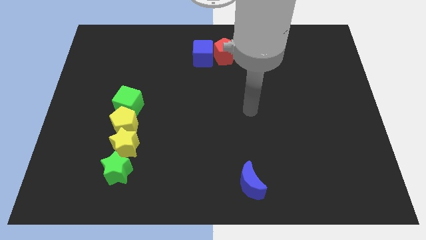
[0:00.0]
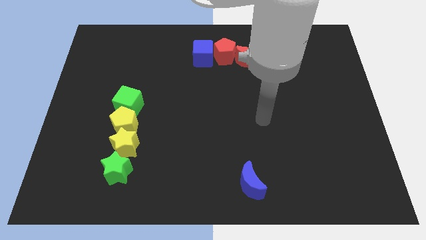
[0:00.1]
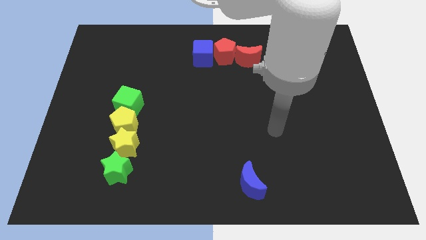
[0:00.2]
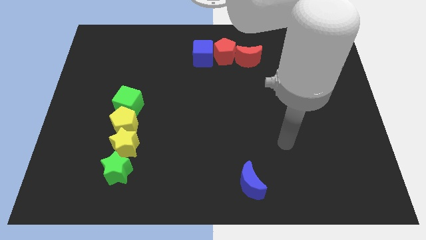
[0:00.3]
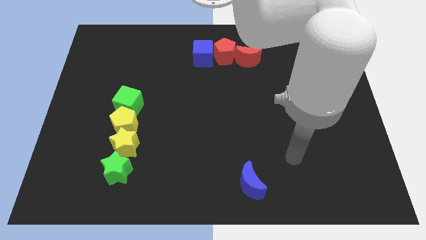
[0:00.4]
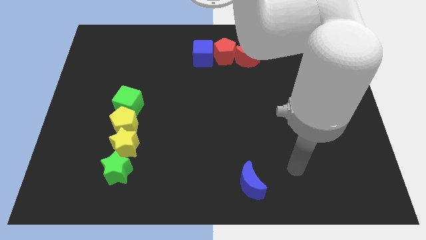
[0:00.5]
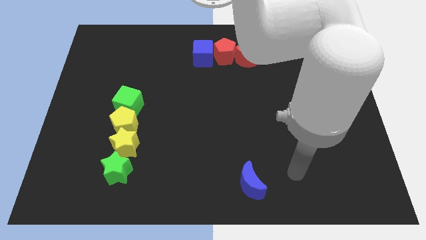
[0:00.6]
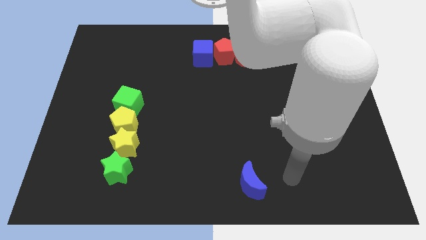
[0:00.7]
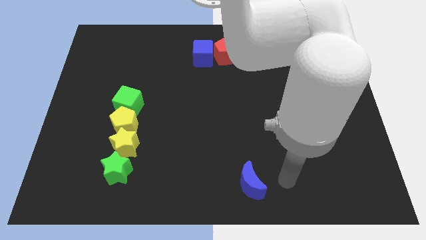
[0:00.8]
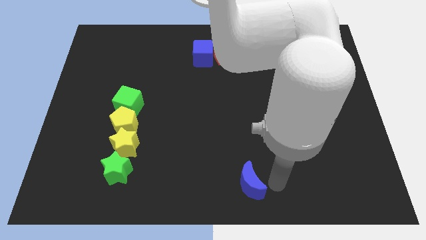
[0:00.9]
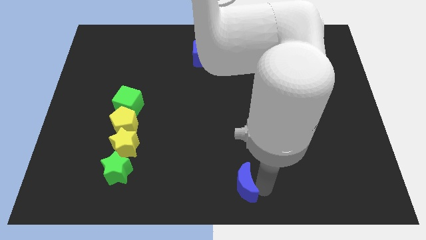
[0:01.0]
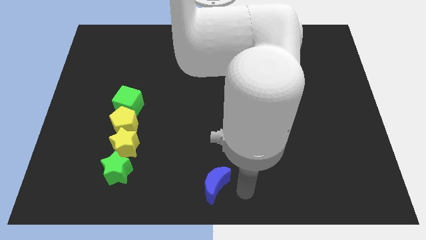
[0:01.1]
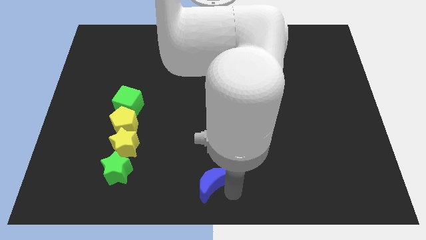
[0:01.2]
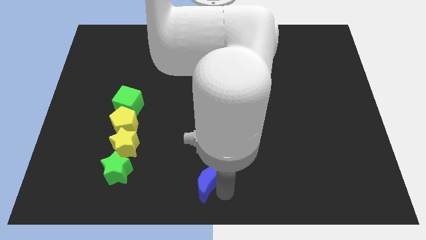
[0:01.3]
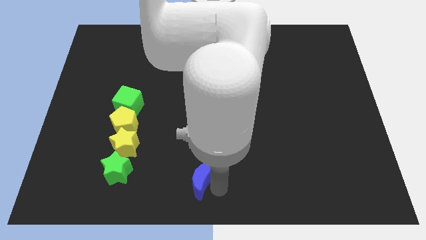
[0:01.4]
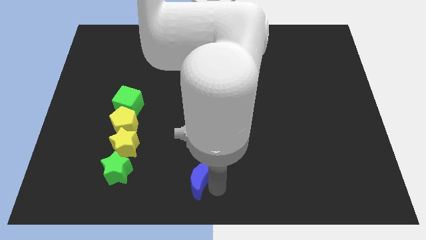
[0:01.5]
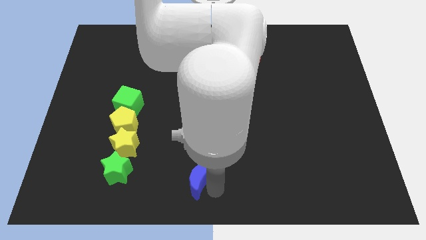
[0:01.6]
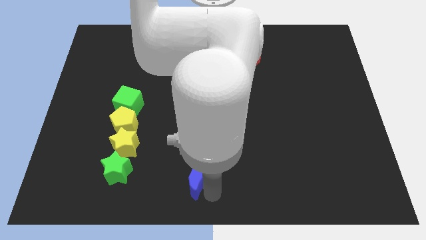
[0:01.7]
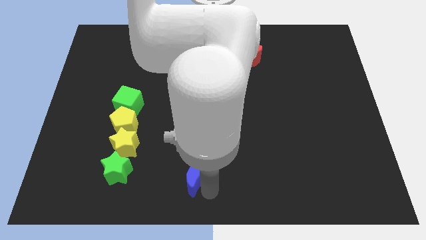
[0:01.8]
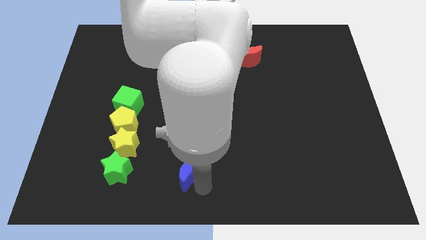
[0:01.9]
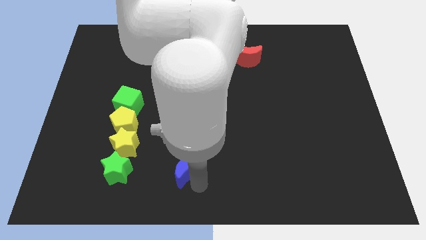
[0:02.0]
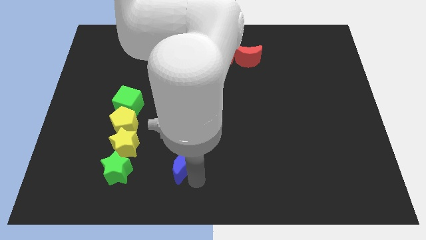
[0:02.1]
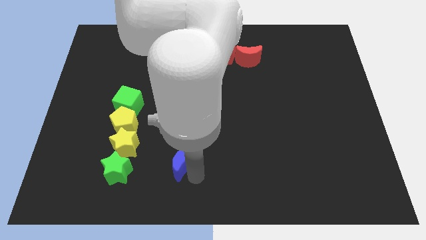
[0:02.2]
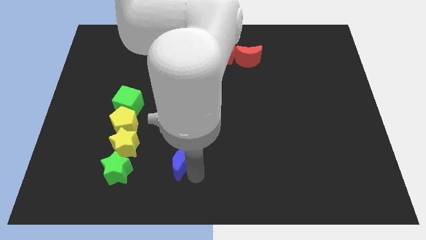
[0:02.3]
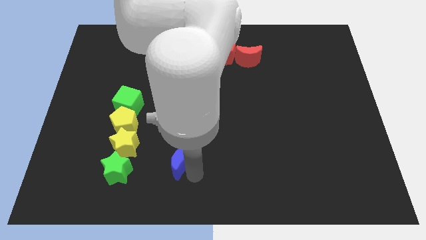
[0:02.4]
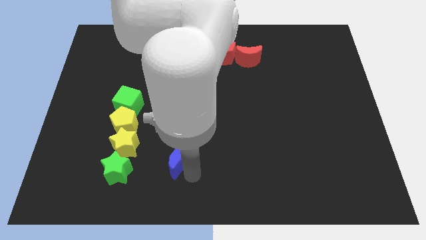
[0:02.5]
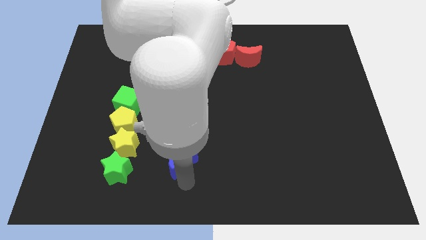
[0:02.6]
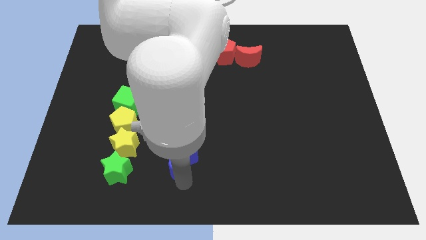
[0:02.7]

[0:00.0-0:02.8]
move the blue moon to the right of yellow and green stars

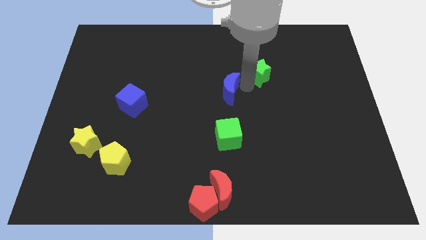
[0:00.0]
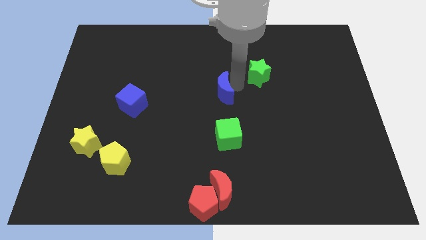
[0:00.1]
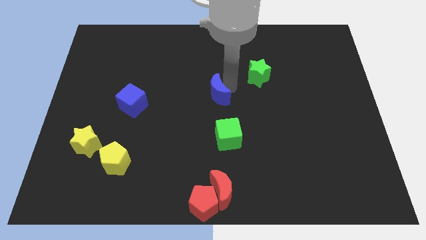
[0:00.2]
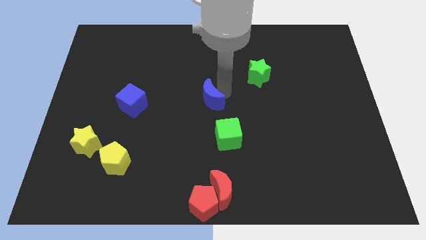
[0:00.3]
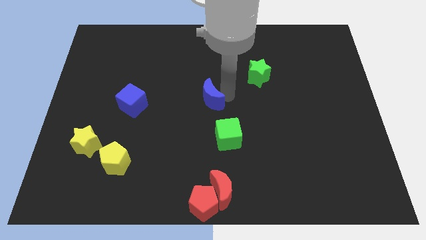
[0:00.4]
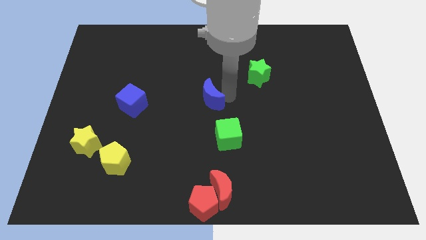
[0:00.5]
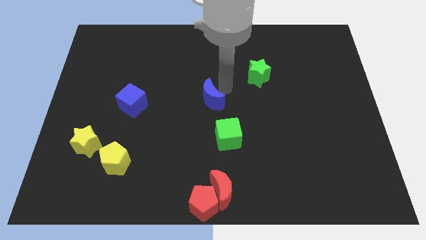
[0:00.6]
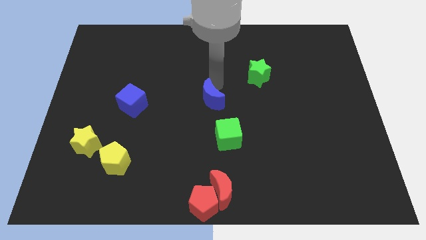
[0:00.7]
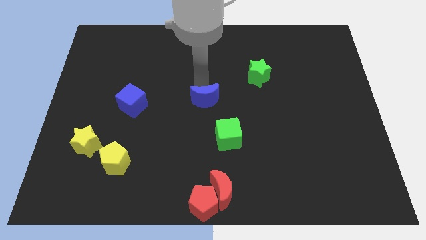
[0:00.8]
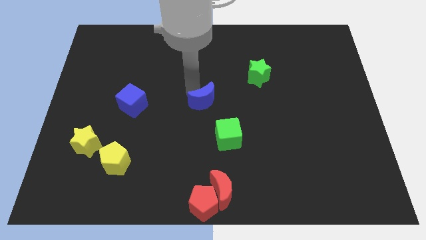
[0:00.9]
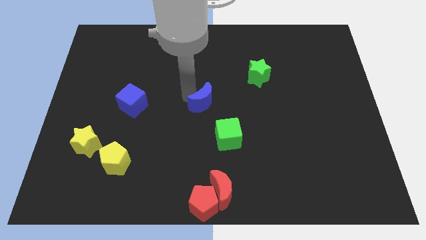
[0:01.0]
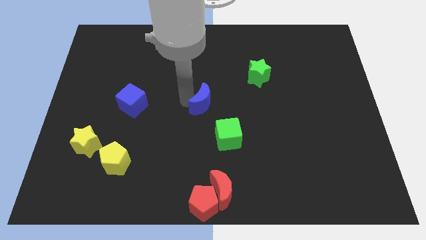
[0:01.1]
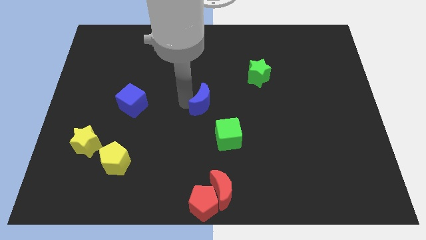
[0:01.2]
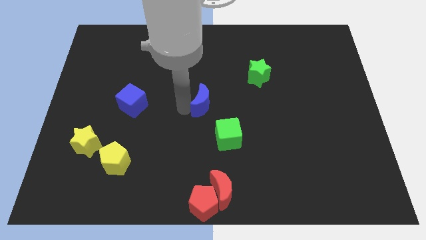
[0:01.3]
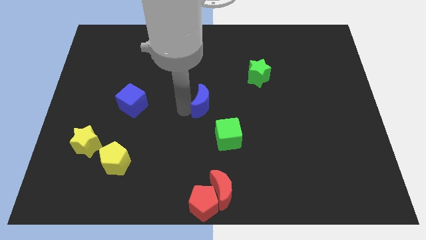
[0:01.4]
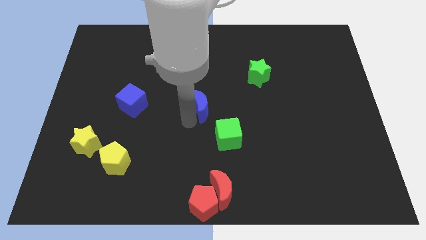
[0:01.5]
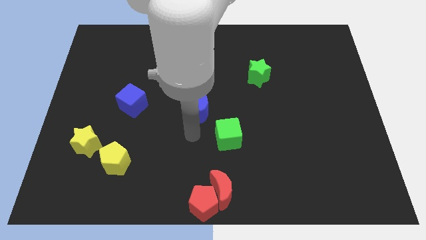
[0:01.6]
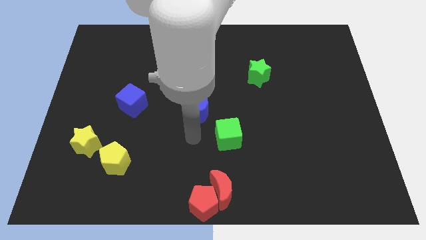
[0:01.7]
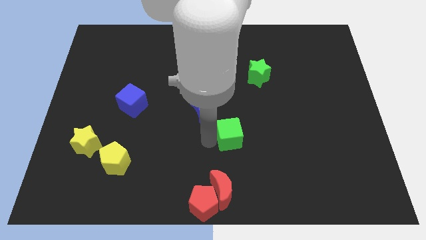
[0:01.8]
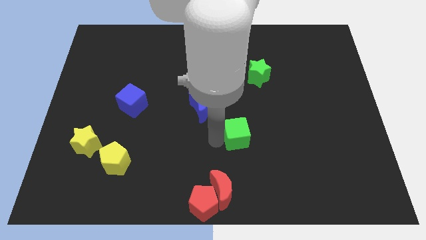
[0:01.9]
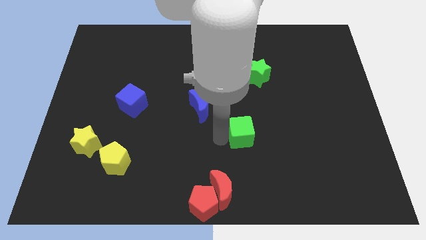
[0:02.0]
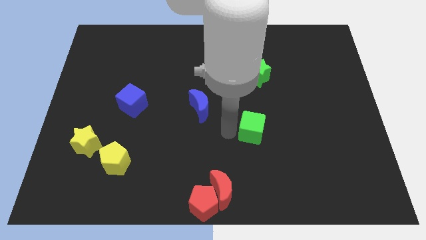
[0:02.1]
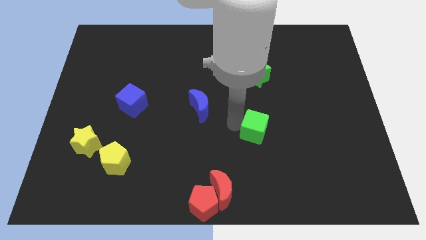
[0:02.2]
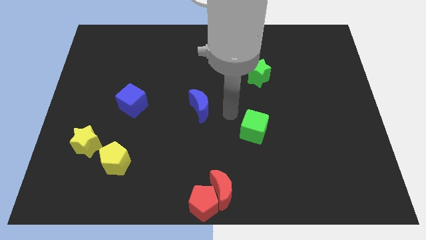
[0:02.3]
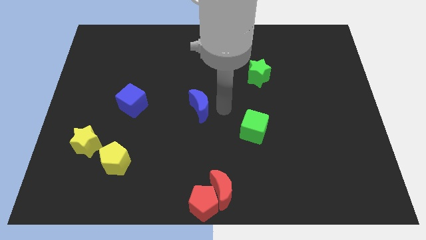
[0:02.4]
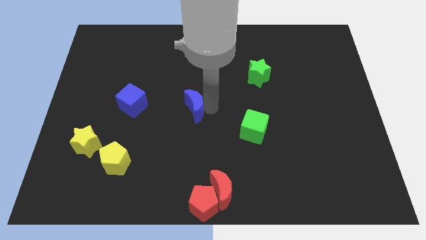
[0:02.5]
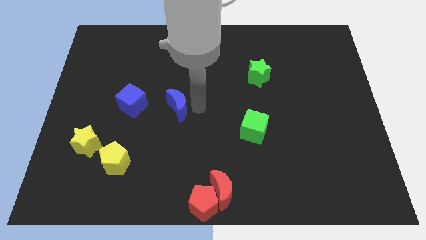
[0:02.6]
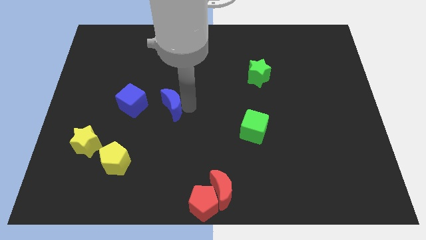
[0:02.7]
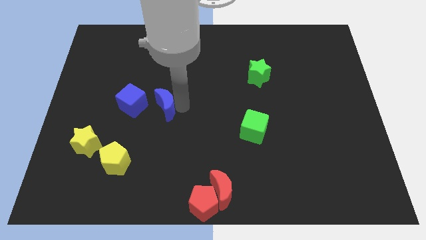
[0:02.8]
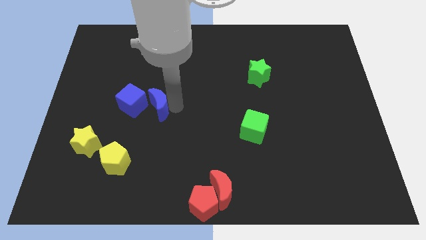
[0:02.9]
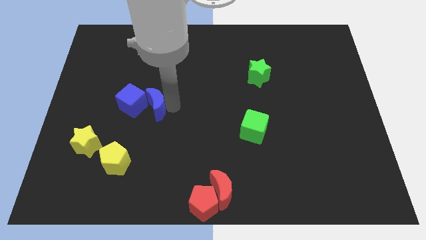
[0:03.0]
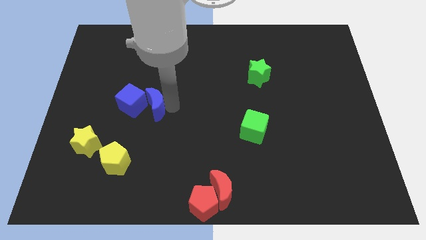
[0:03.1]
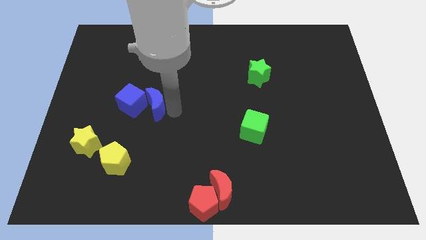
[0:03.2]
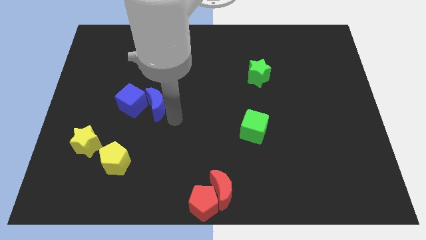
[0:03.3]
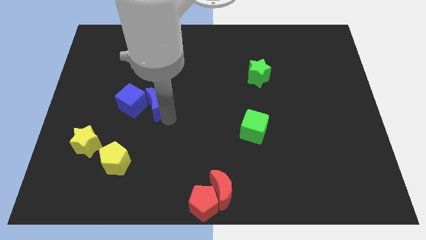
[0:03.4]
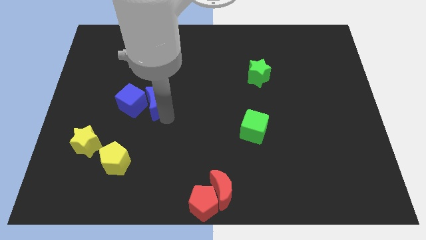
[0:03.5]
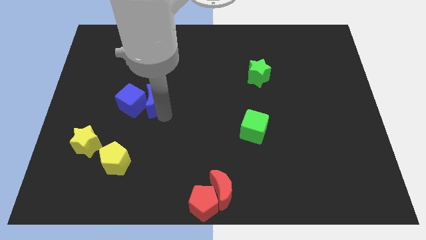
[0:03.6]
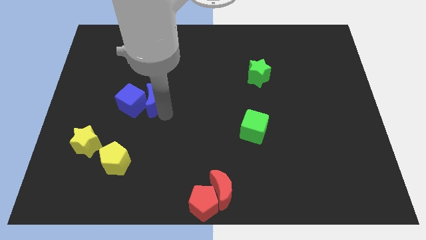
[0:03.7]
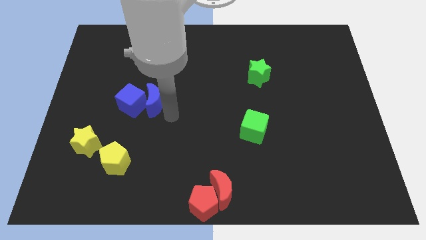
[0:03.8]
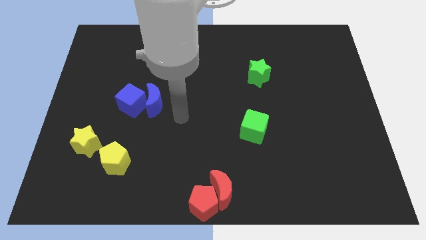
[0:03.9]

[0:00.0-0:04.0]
move the blue crescent to the right of the blue cube

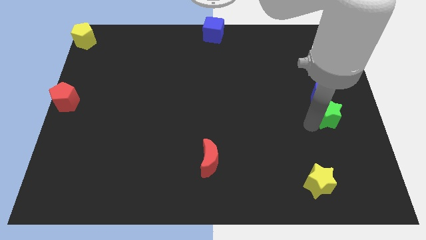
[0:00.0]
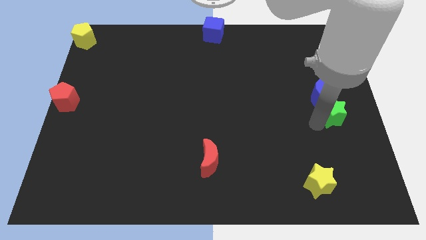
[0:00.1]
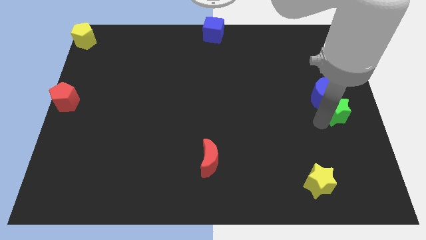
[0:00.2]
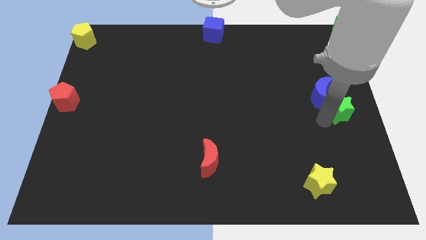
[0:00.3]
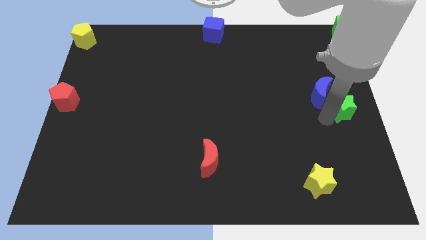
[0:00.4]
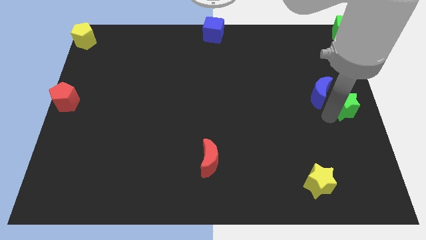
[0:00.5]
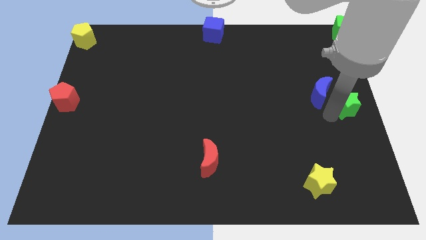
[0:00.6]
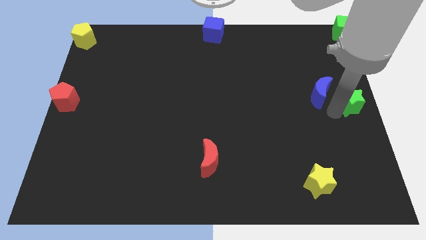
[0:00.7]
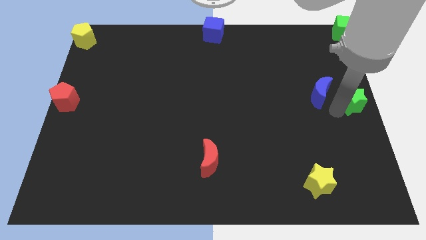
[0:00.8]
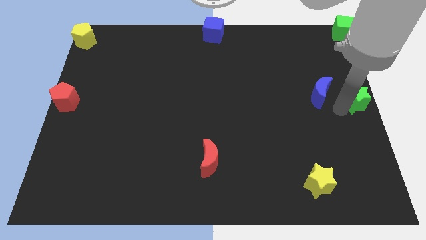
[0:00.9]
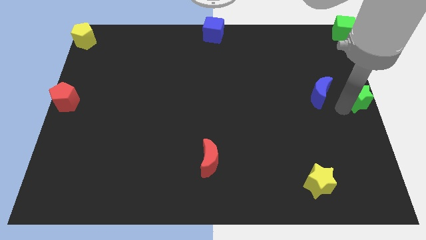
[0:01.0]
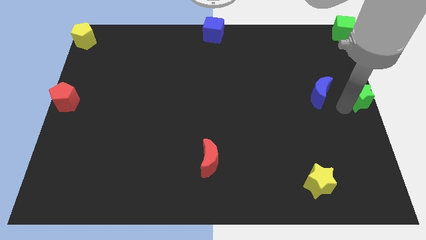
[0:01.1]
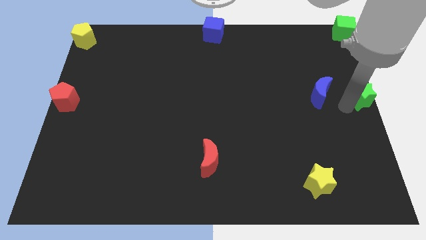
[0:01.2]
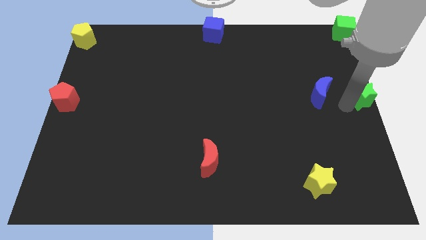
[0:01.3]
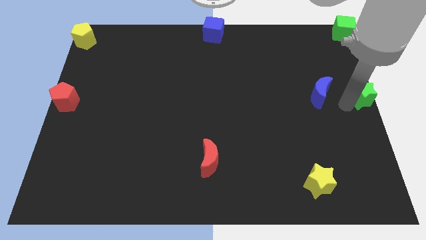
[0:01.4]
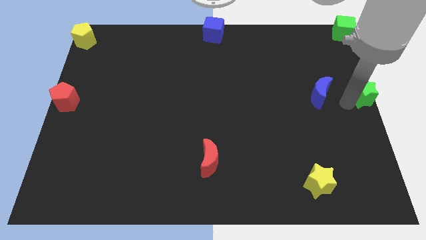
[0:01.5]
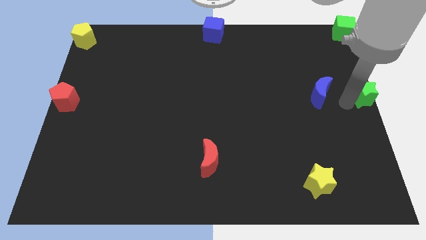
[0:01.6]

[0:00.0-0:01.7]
place the green star to the right middle end

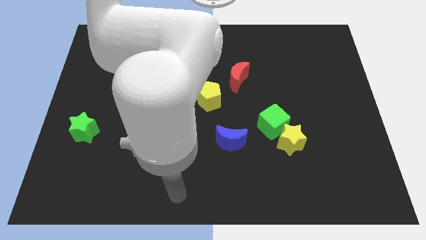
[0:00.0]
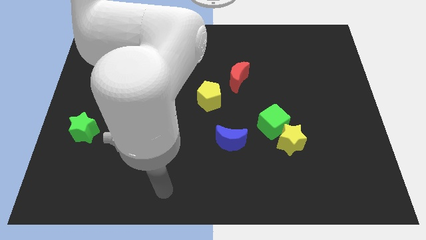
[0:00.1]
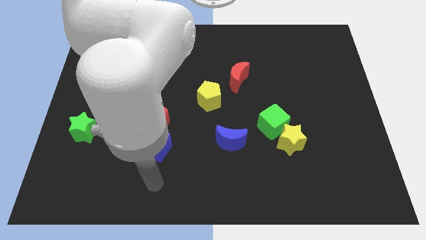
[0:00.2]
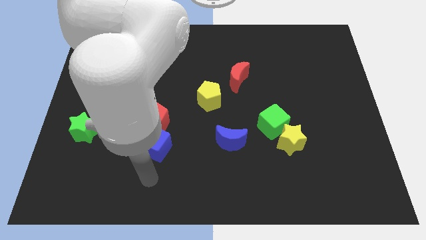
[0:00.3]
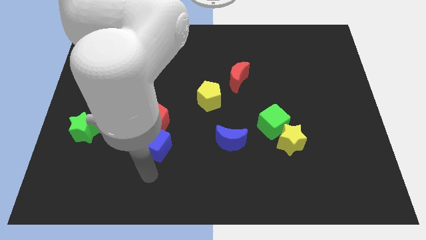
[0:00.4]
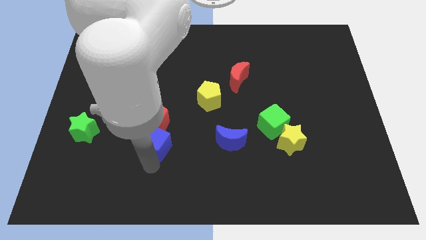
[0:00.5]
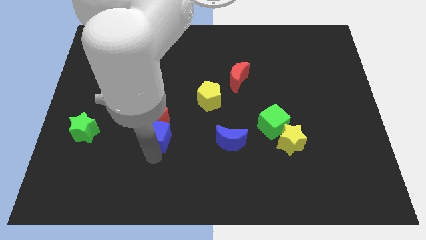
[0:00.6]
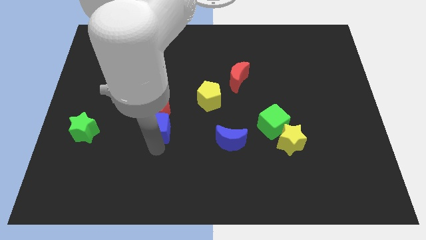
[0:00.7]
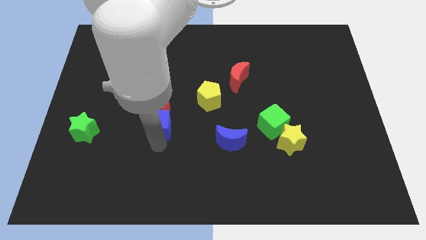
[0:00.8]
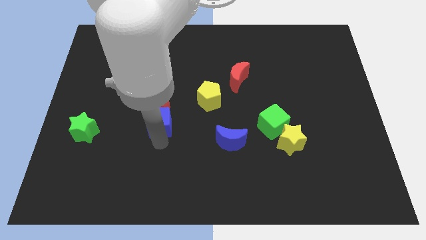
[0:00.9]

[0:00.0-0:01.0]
push red pentagon with the blue cube
